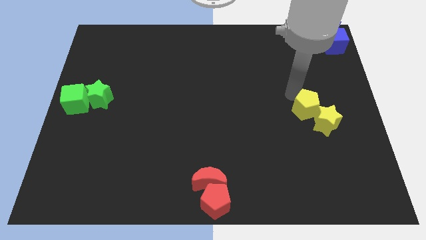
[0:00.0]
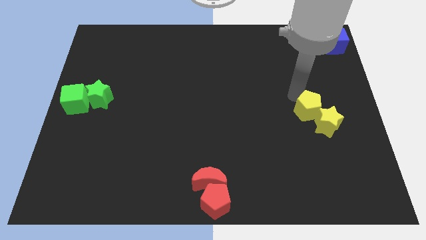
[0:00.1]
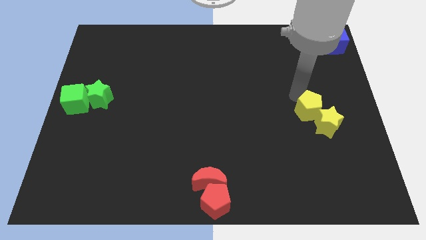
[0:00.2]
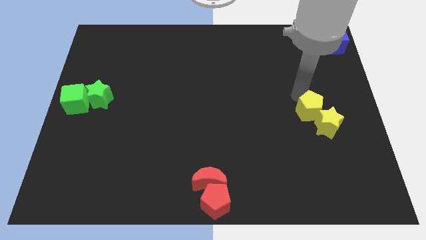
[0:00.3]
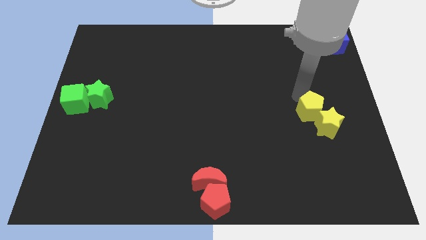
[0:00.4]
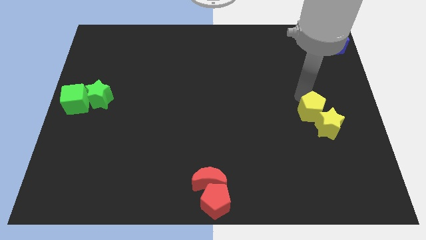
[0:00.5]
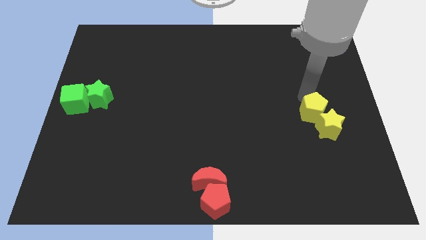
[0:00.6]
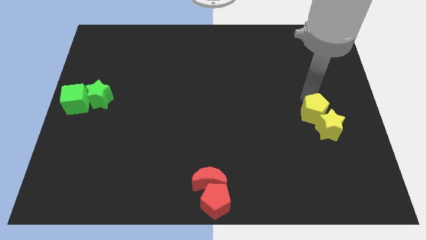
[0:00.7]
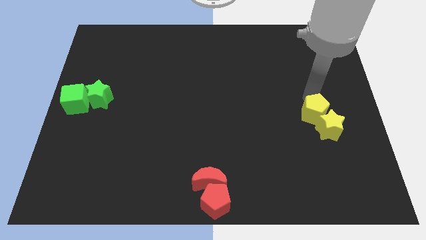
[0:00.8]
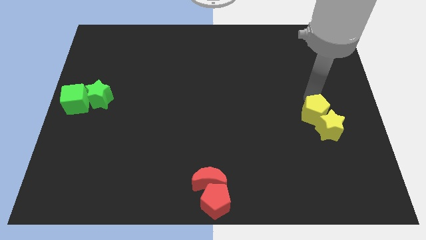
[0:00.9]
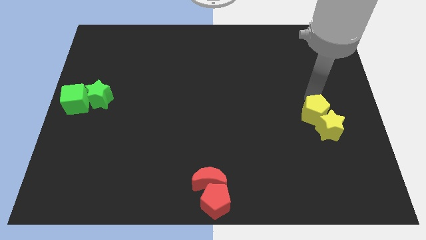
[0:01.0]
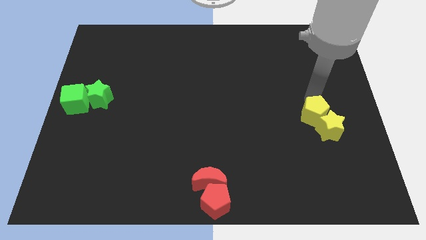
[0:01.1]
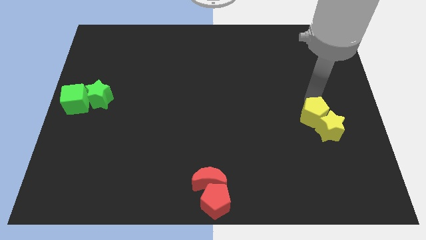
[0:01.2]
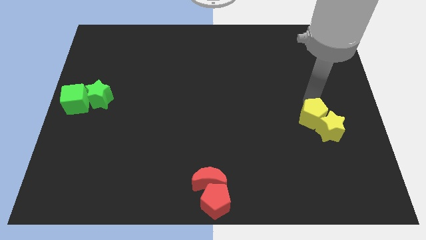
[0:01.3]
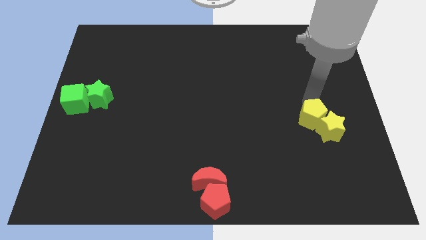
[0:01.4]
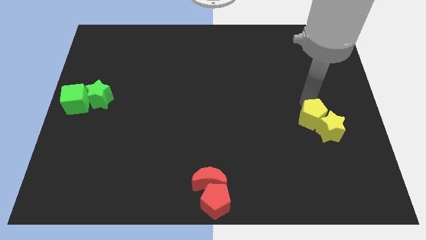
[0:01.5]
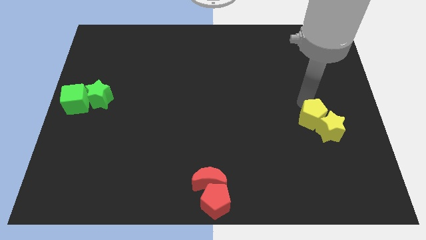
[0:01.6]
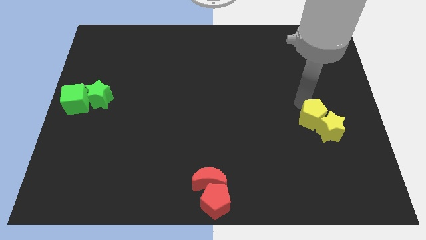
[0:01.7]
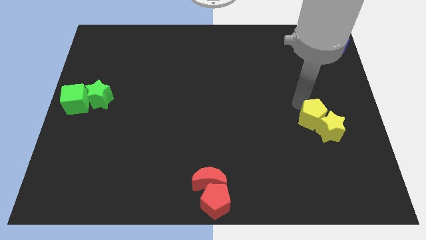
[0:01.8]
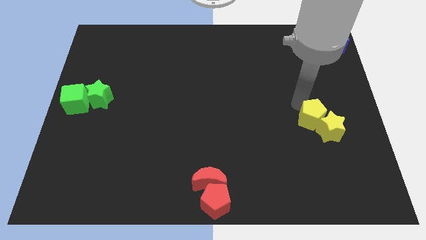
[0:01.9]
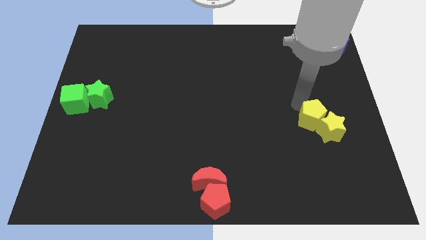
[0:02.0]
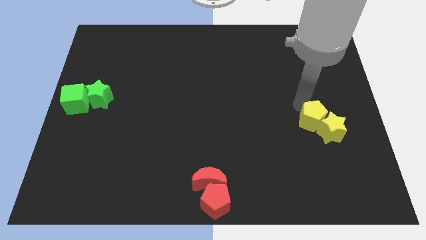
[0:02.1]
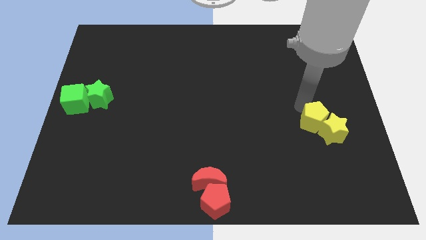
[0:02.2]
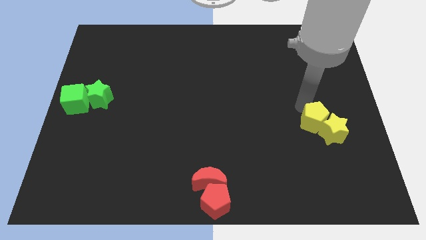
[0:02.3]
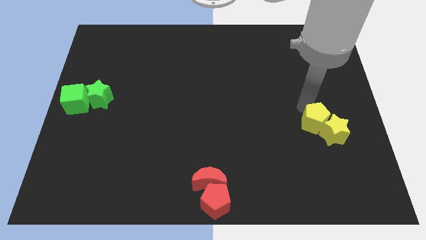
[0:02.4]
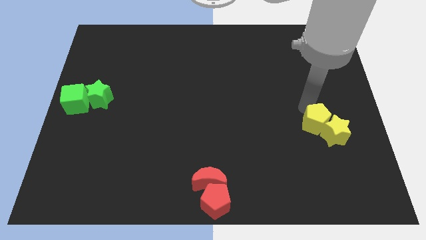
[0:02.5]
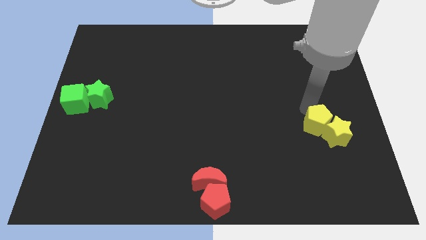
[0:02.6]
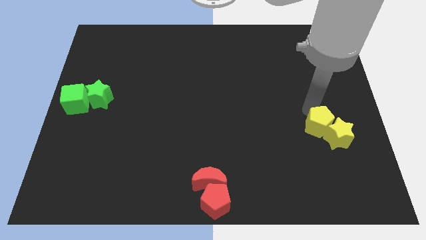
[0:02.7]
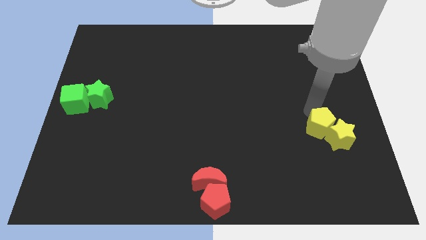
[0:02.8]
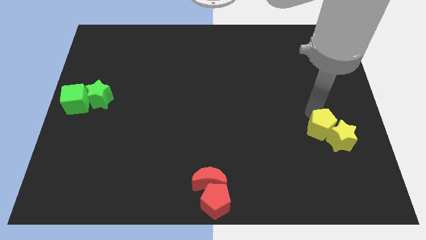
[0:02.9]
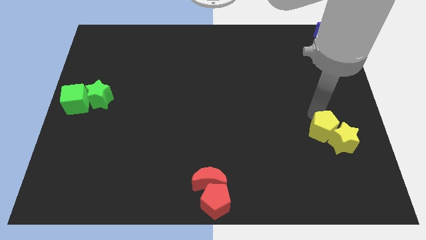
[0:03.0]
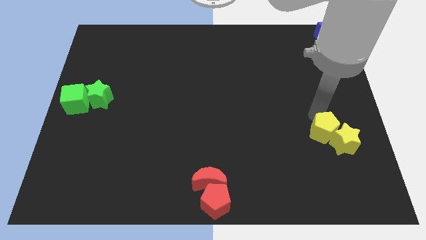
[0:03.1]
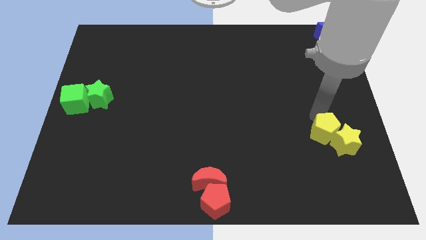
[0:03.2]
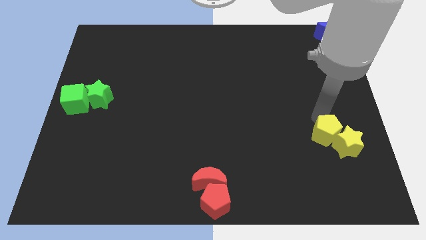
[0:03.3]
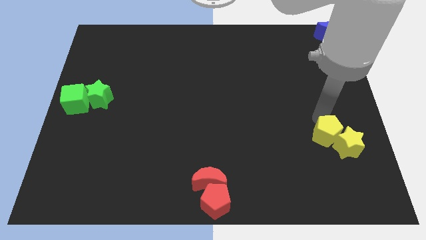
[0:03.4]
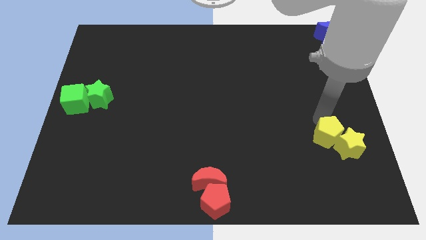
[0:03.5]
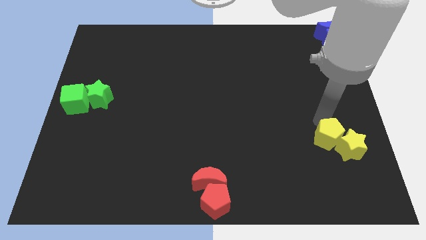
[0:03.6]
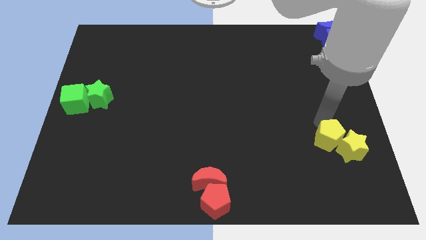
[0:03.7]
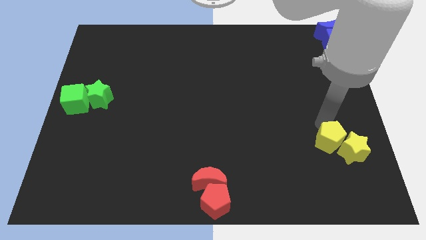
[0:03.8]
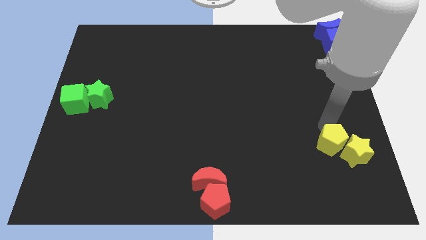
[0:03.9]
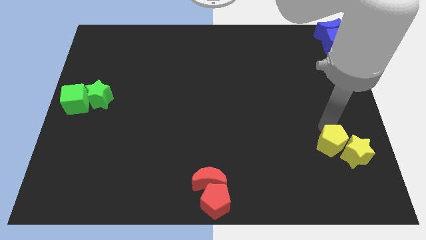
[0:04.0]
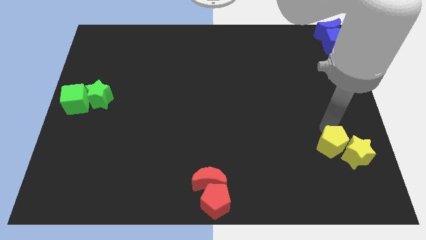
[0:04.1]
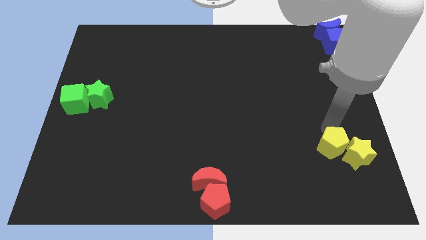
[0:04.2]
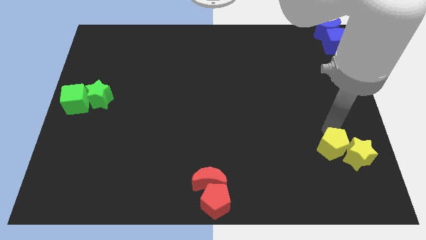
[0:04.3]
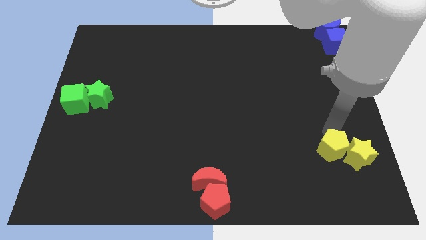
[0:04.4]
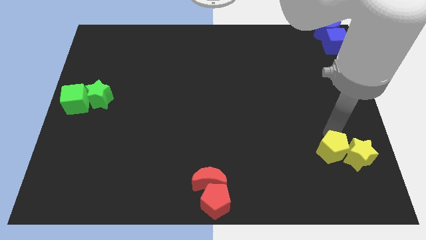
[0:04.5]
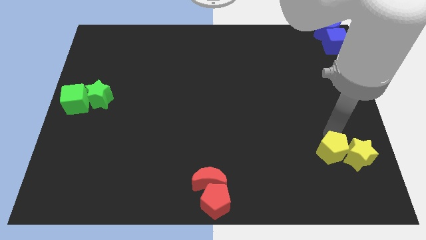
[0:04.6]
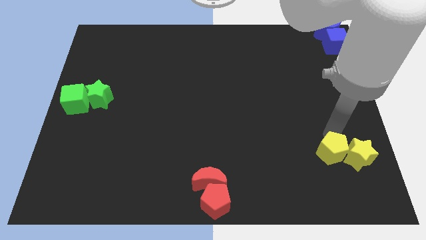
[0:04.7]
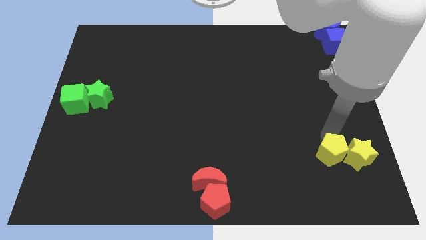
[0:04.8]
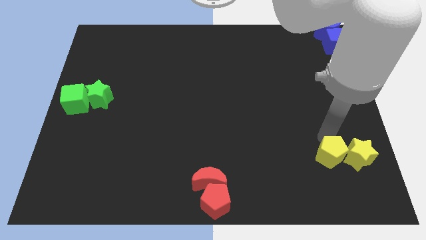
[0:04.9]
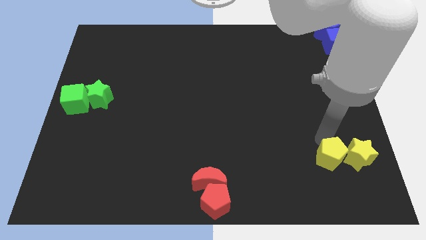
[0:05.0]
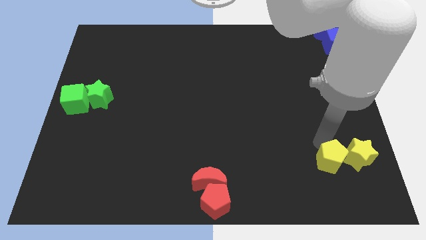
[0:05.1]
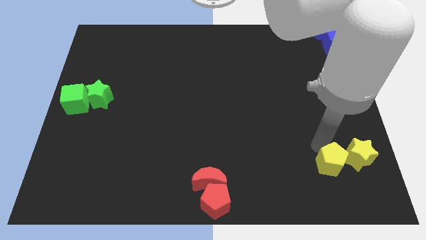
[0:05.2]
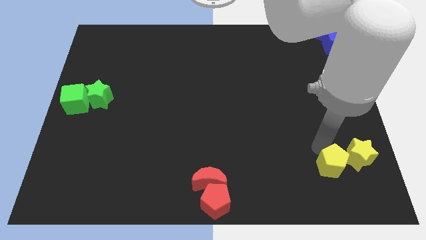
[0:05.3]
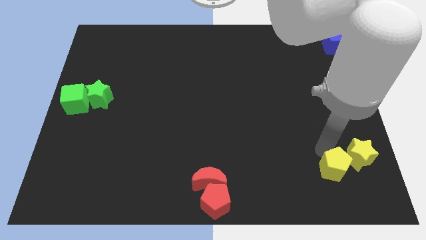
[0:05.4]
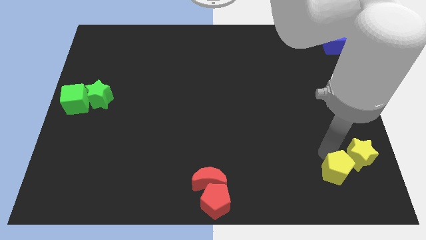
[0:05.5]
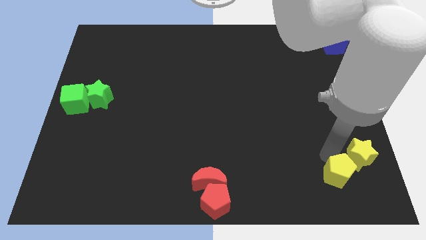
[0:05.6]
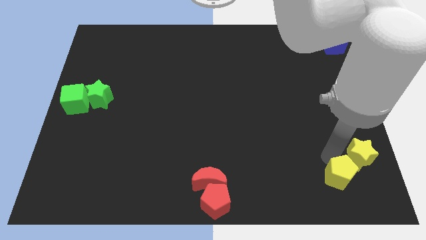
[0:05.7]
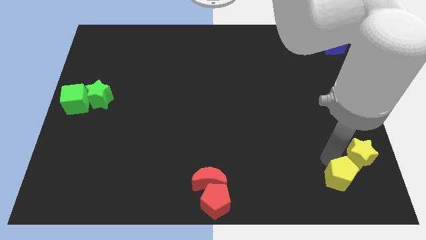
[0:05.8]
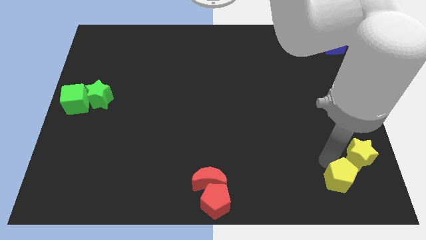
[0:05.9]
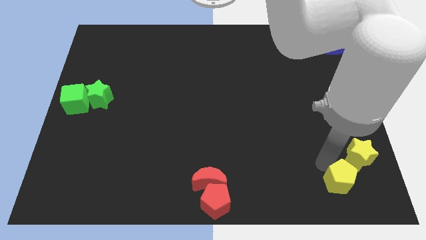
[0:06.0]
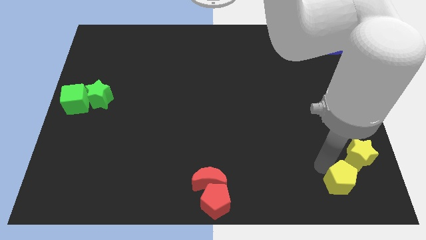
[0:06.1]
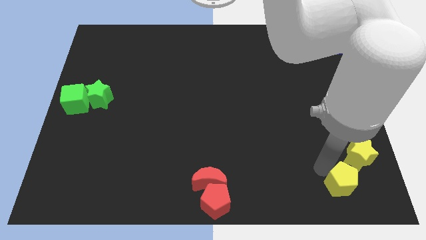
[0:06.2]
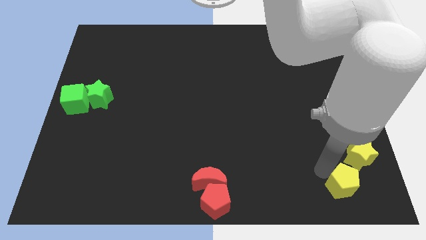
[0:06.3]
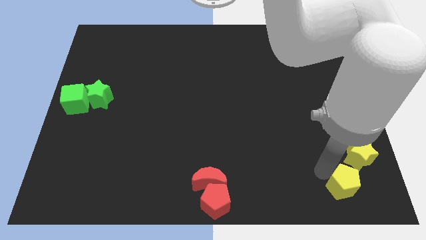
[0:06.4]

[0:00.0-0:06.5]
place the yellow blocks towards the bottom right side of the board

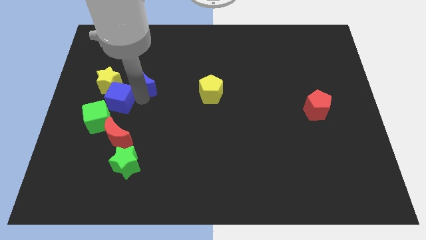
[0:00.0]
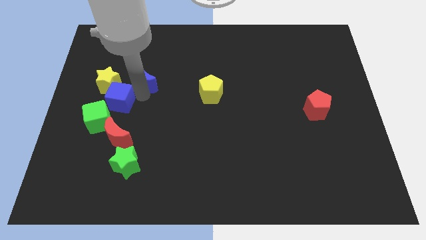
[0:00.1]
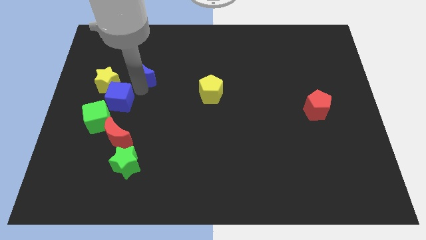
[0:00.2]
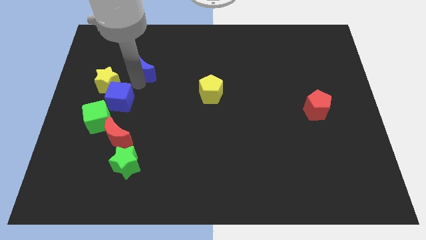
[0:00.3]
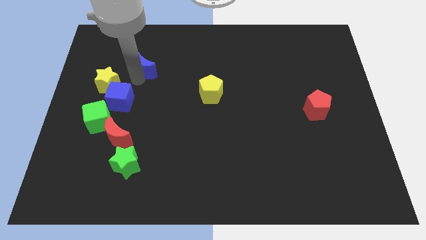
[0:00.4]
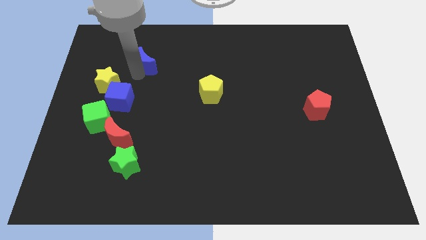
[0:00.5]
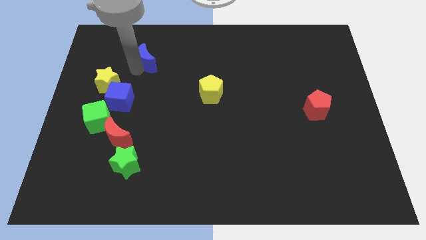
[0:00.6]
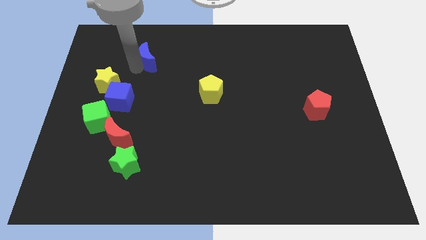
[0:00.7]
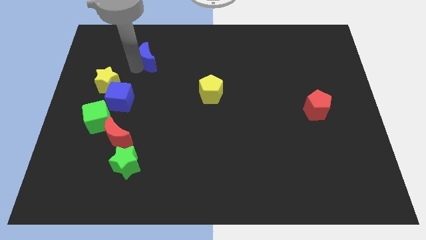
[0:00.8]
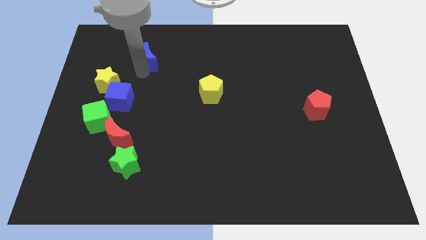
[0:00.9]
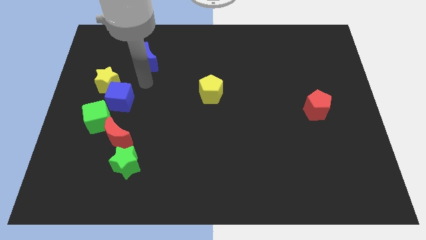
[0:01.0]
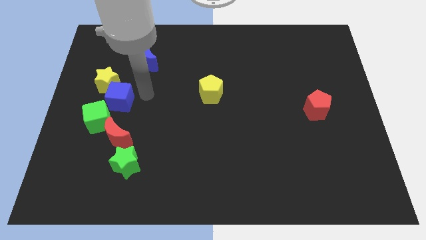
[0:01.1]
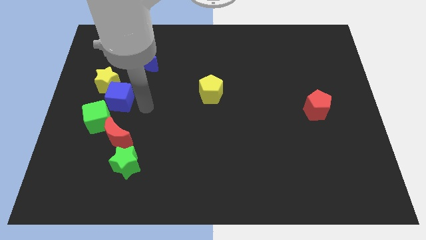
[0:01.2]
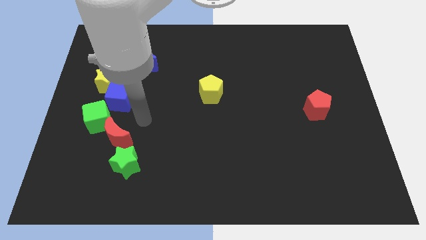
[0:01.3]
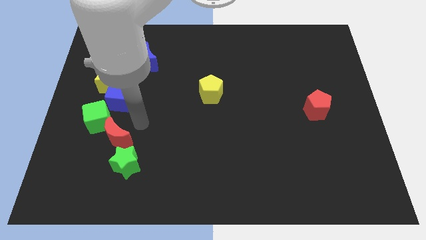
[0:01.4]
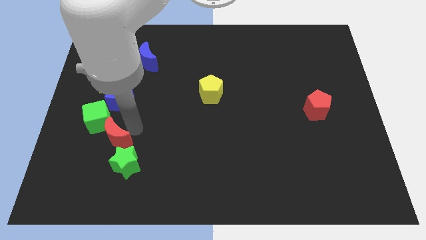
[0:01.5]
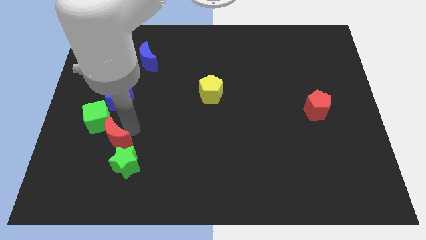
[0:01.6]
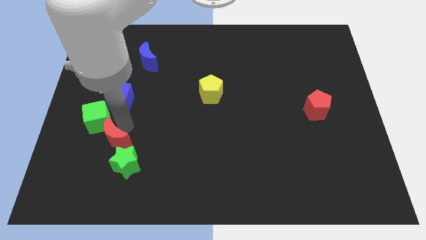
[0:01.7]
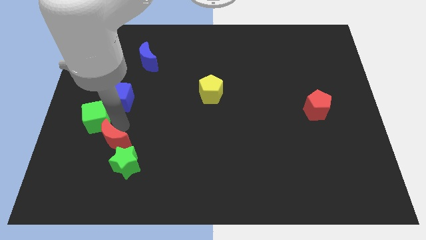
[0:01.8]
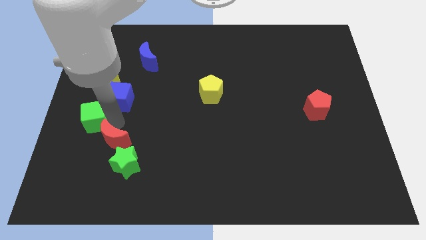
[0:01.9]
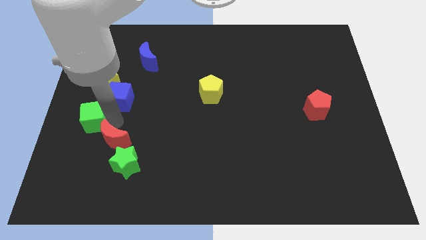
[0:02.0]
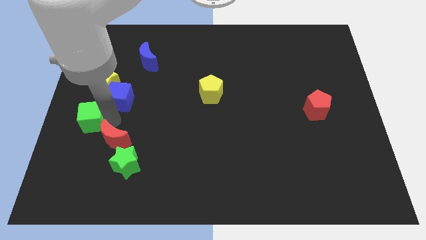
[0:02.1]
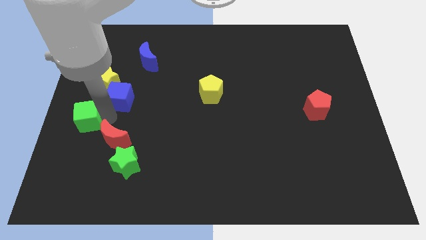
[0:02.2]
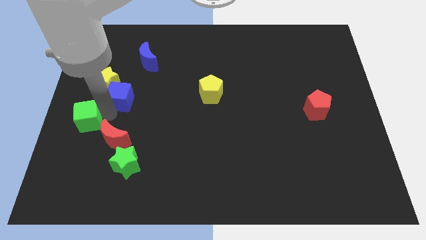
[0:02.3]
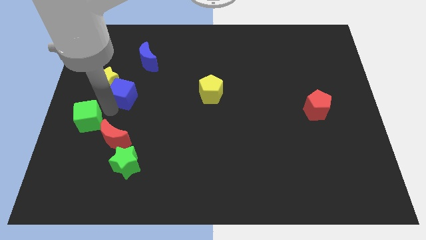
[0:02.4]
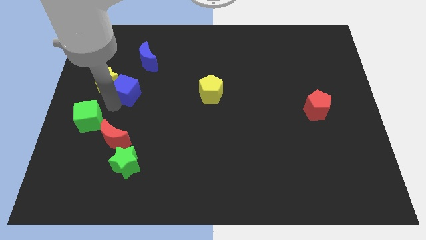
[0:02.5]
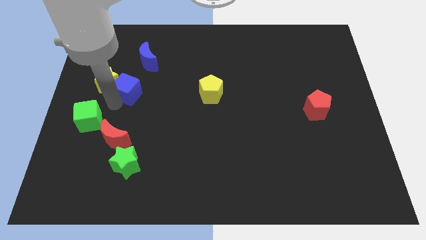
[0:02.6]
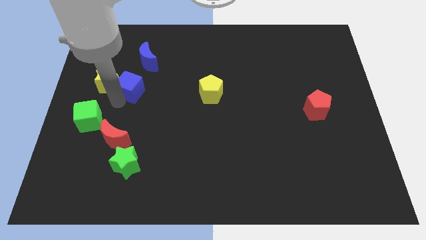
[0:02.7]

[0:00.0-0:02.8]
push the green cube to the middle left
